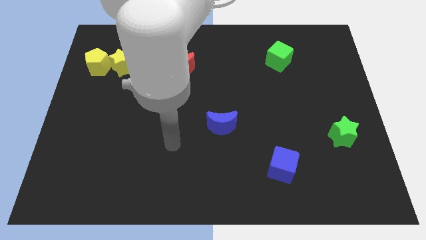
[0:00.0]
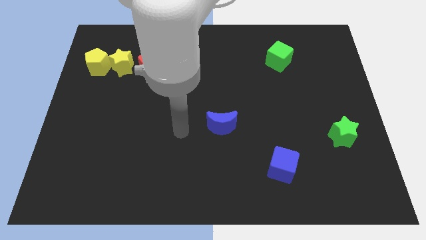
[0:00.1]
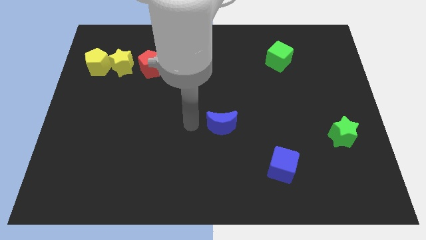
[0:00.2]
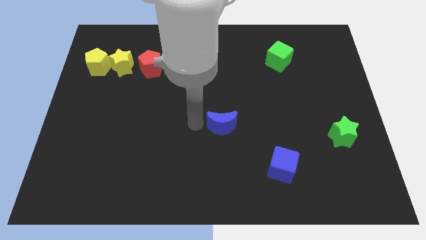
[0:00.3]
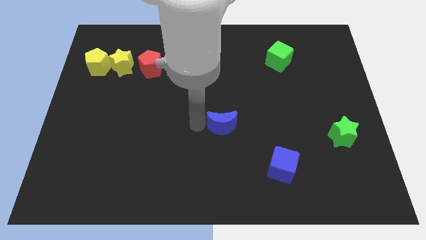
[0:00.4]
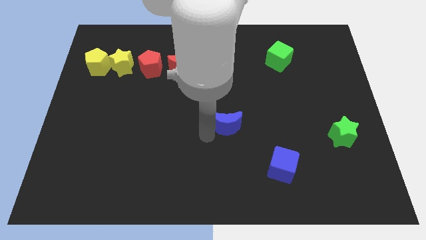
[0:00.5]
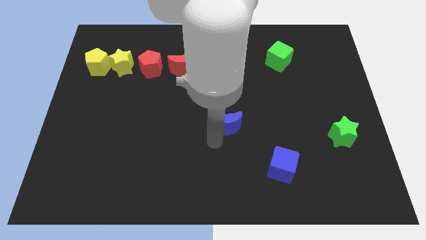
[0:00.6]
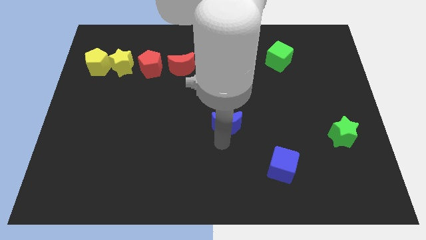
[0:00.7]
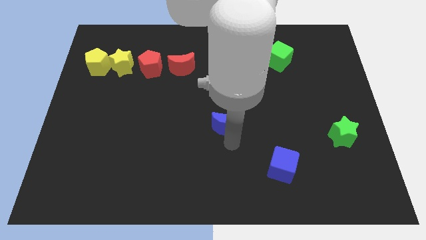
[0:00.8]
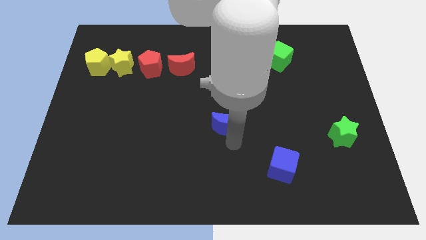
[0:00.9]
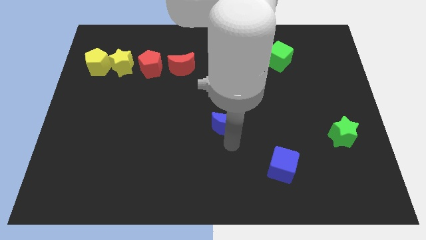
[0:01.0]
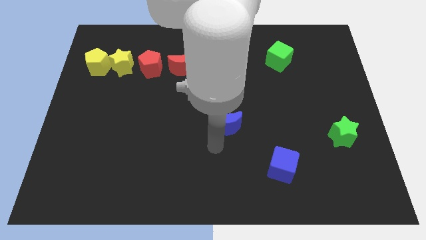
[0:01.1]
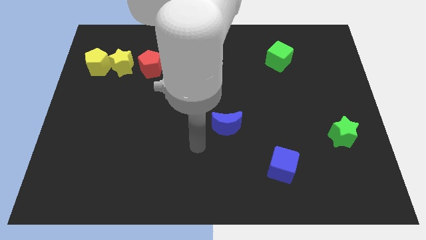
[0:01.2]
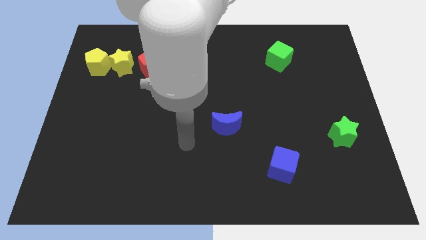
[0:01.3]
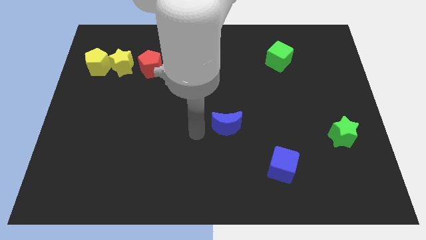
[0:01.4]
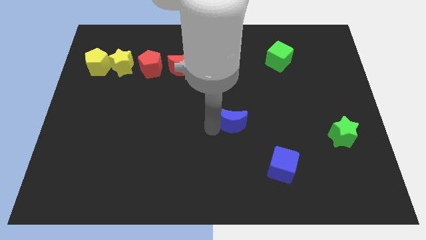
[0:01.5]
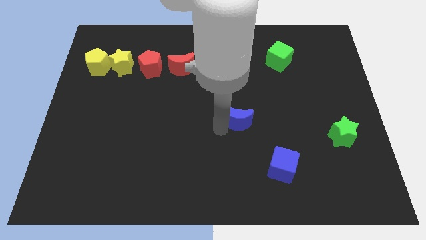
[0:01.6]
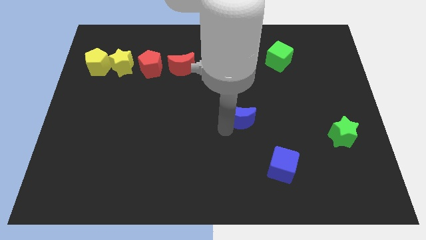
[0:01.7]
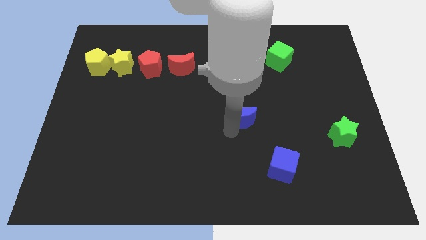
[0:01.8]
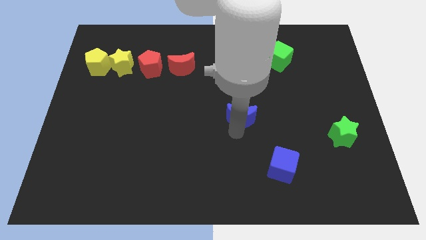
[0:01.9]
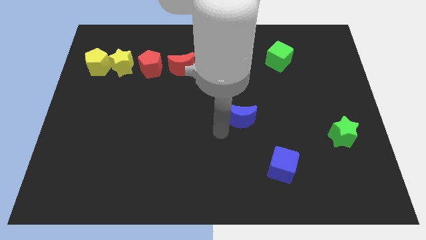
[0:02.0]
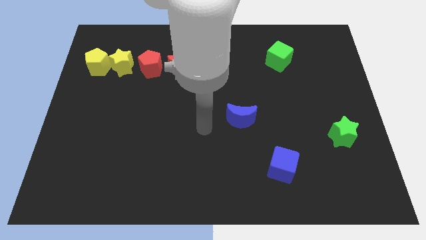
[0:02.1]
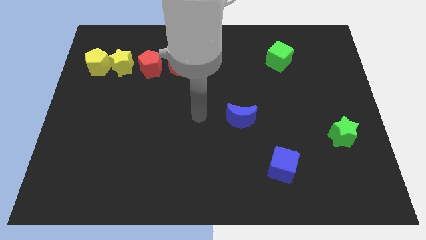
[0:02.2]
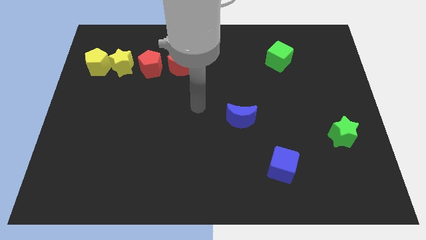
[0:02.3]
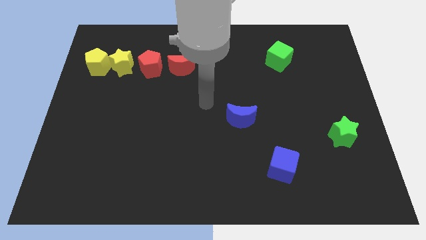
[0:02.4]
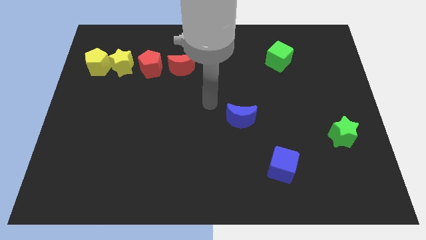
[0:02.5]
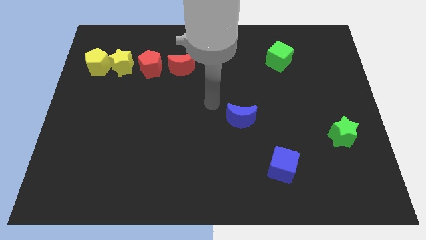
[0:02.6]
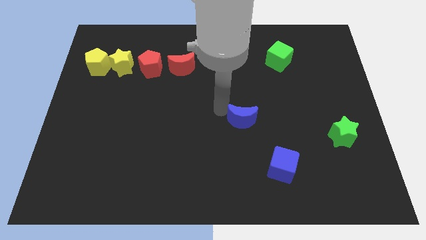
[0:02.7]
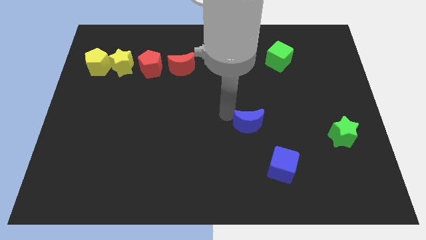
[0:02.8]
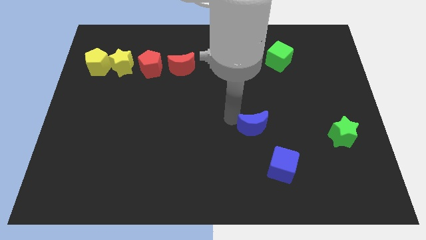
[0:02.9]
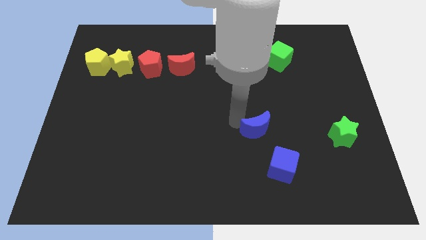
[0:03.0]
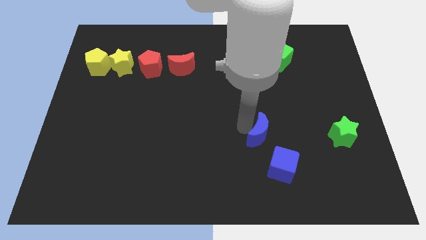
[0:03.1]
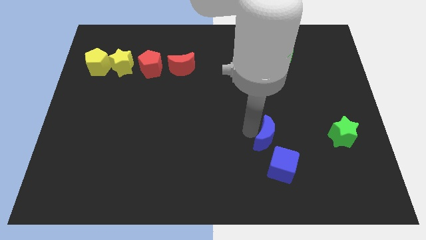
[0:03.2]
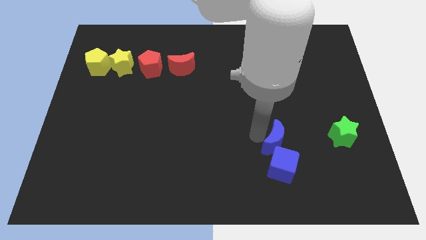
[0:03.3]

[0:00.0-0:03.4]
place the blue moon at the top left of the blue cube

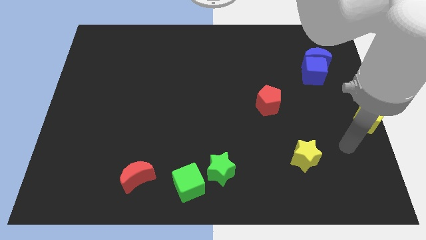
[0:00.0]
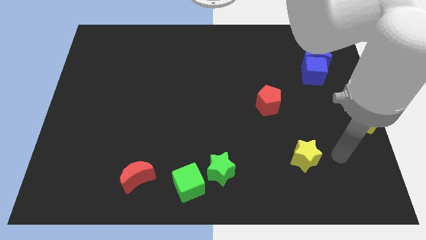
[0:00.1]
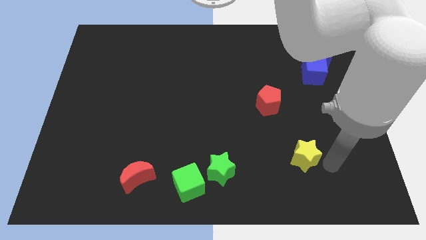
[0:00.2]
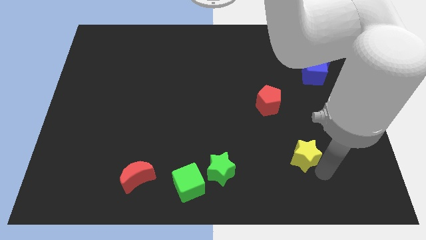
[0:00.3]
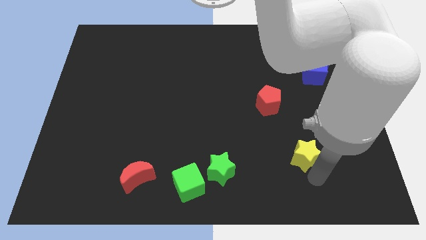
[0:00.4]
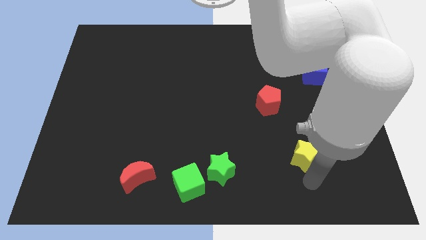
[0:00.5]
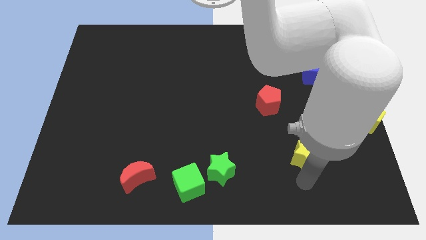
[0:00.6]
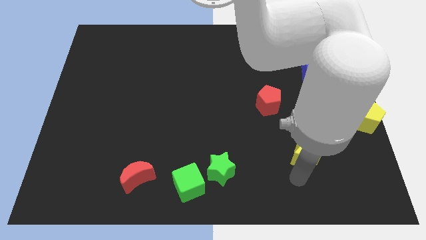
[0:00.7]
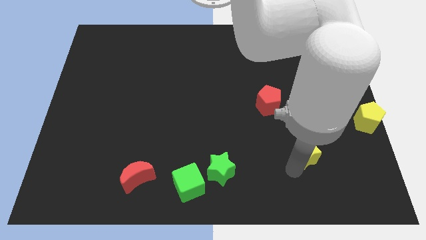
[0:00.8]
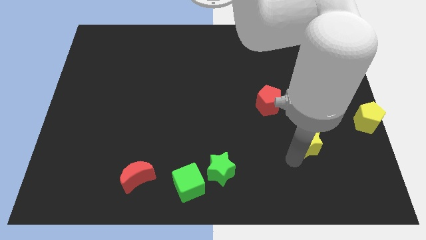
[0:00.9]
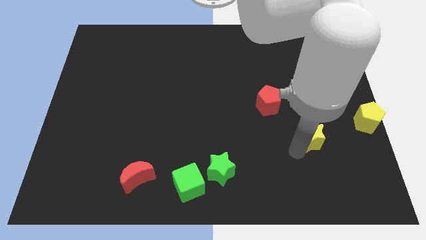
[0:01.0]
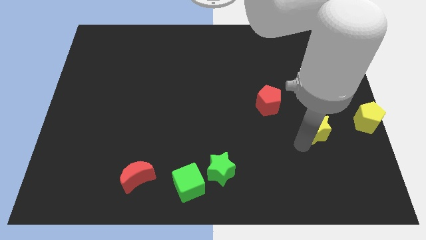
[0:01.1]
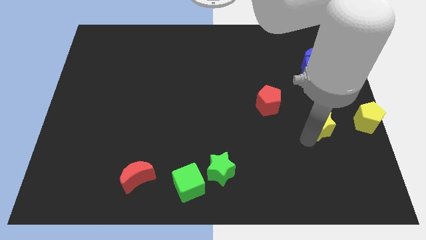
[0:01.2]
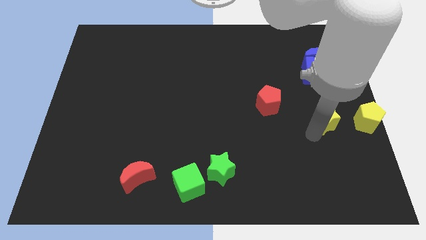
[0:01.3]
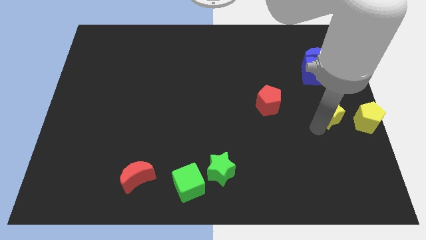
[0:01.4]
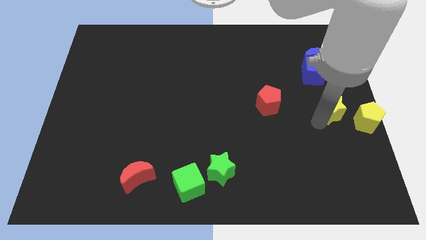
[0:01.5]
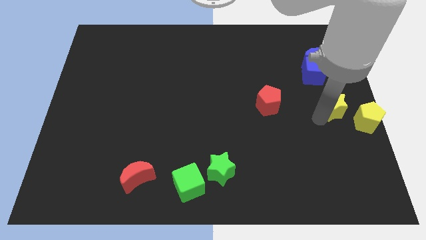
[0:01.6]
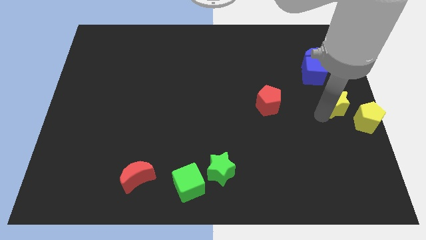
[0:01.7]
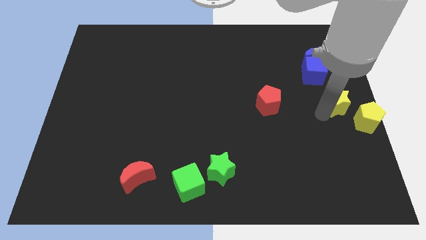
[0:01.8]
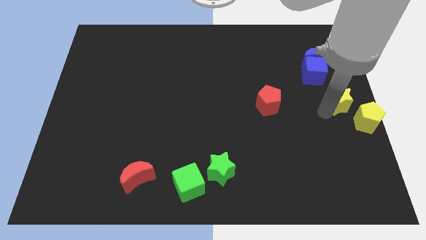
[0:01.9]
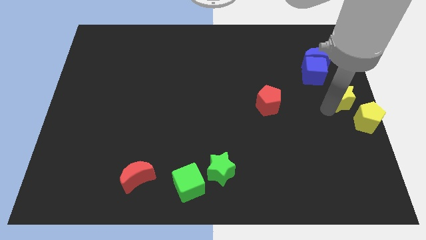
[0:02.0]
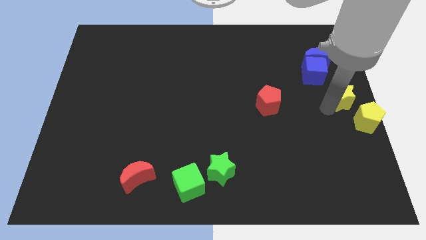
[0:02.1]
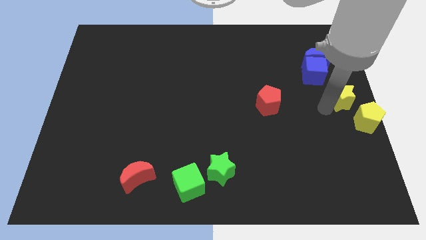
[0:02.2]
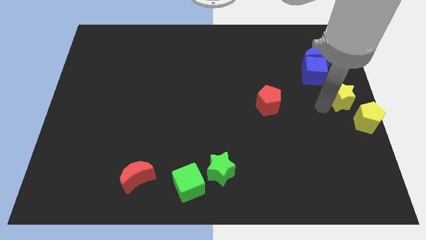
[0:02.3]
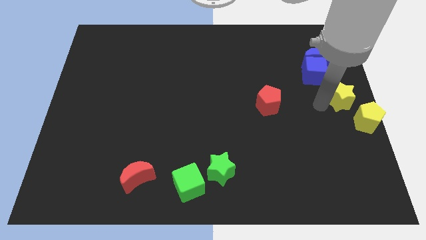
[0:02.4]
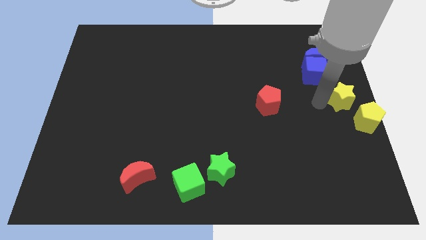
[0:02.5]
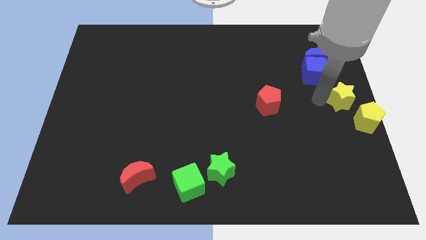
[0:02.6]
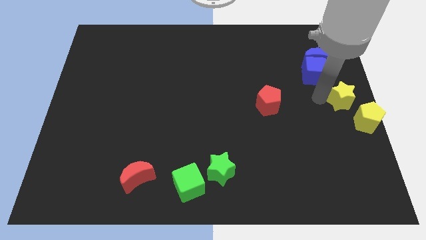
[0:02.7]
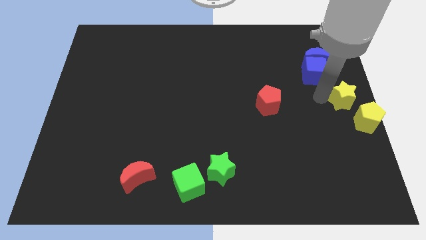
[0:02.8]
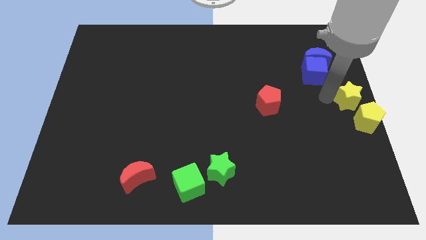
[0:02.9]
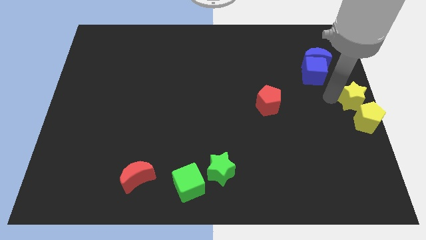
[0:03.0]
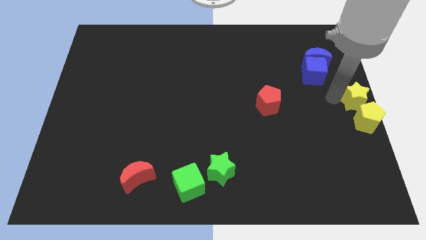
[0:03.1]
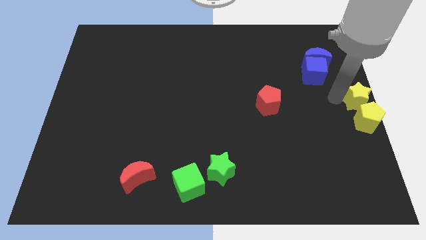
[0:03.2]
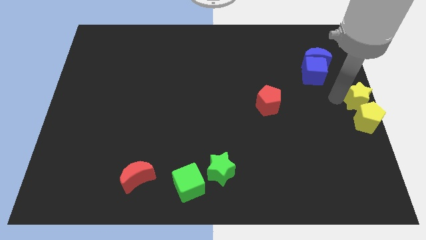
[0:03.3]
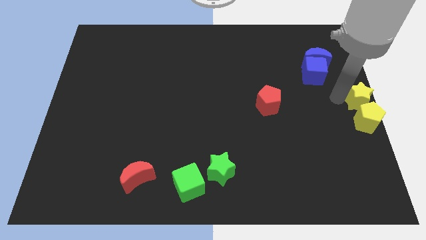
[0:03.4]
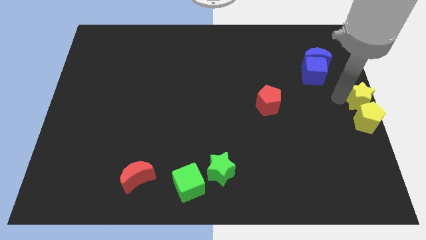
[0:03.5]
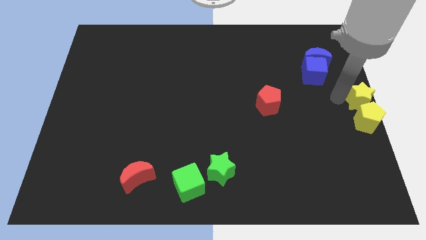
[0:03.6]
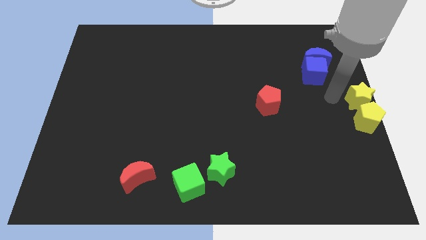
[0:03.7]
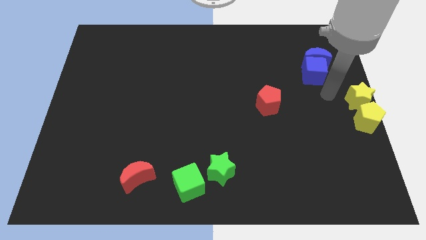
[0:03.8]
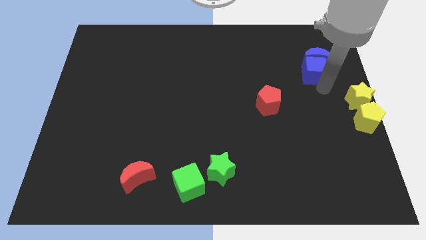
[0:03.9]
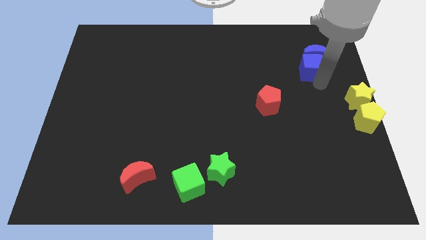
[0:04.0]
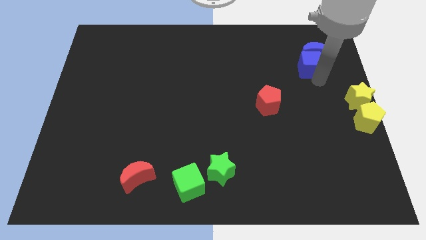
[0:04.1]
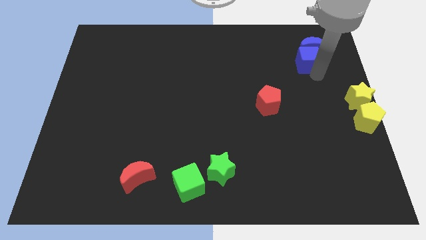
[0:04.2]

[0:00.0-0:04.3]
move the yellow star towards the top side of the yellow pentagon

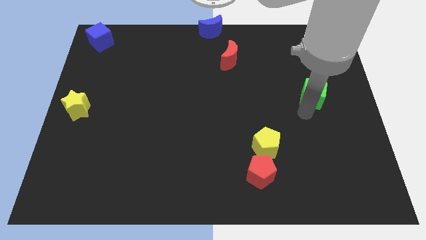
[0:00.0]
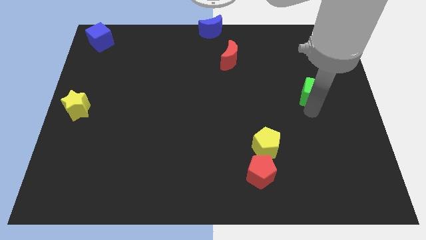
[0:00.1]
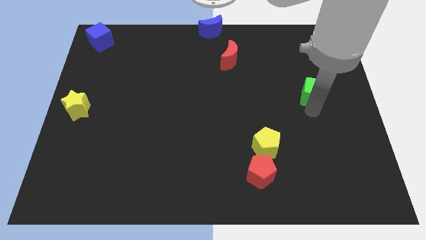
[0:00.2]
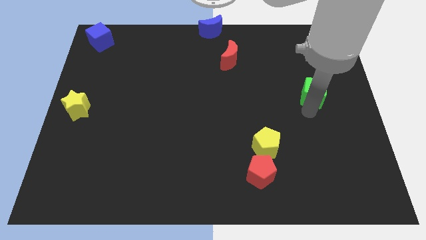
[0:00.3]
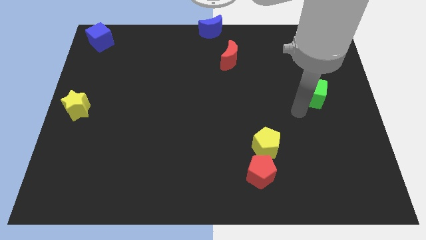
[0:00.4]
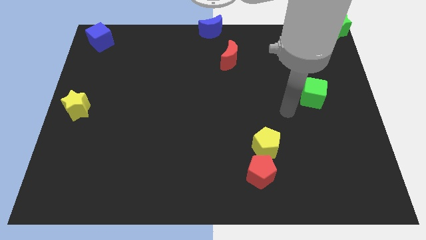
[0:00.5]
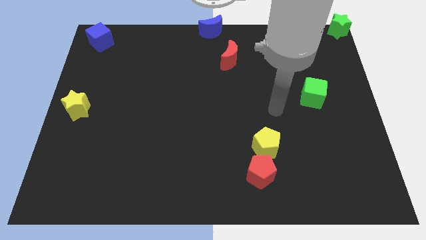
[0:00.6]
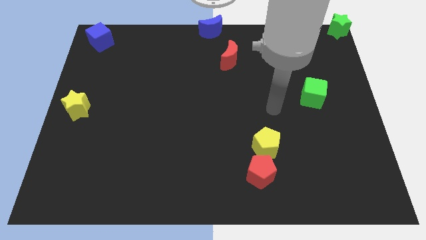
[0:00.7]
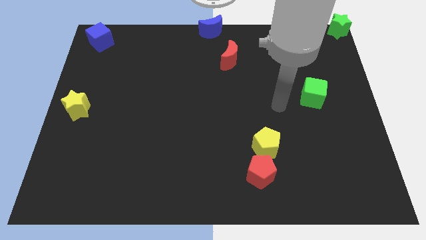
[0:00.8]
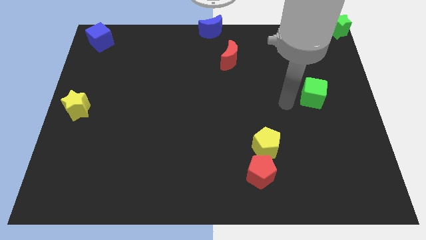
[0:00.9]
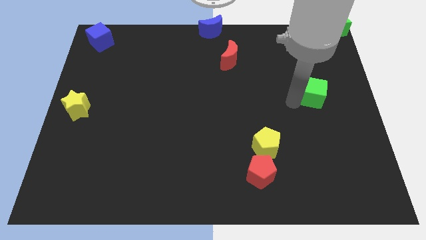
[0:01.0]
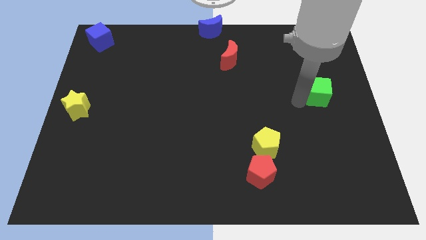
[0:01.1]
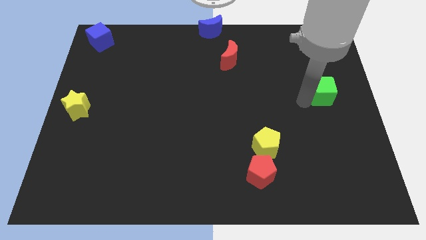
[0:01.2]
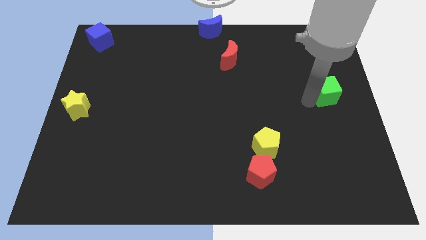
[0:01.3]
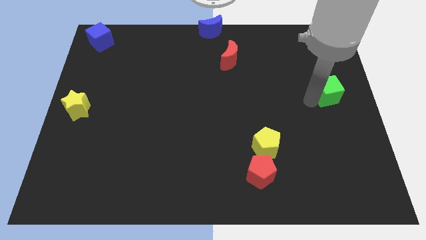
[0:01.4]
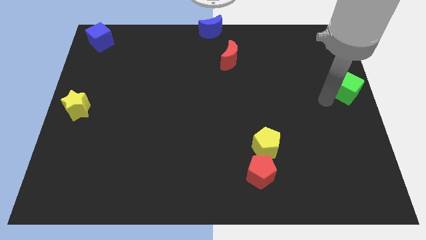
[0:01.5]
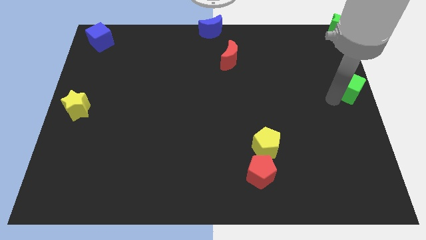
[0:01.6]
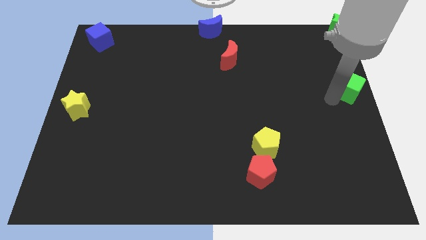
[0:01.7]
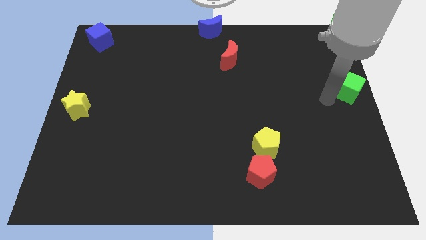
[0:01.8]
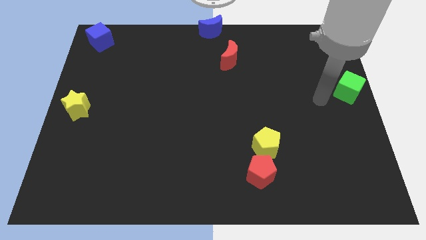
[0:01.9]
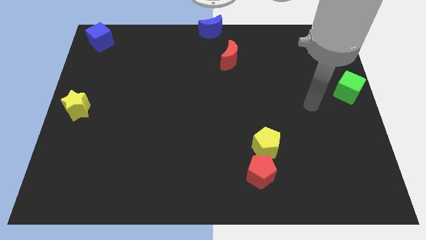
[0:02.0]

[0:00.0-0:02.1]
place green cube at the center right
